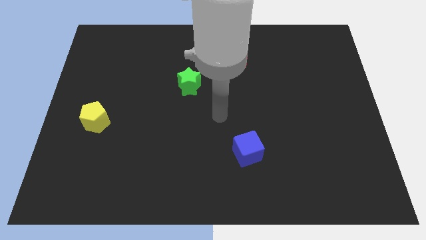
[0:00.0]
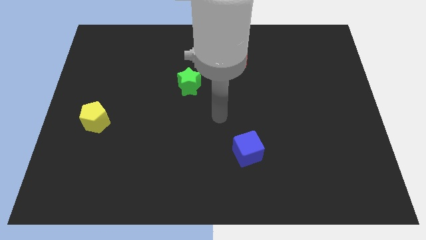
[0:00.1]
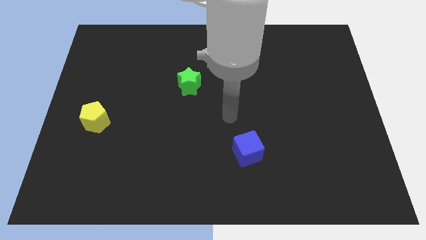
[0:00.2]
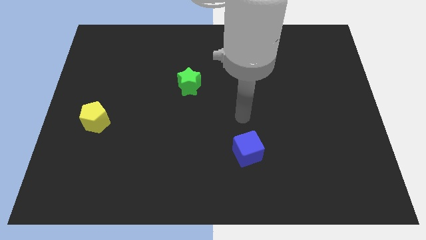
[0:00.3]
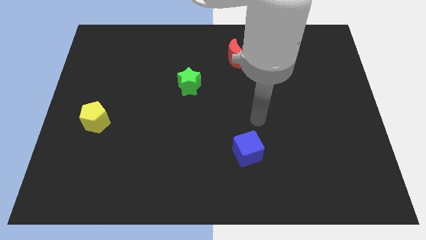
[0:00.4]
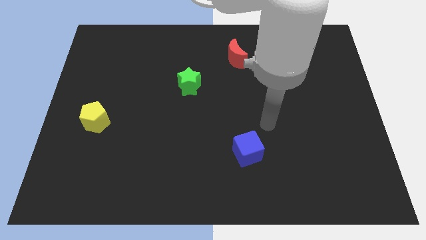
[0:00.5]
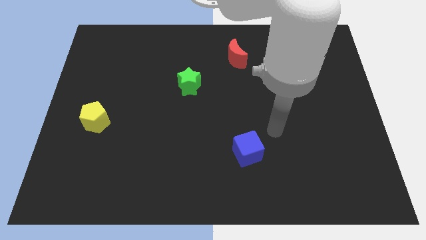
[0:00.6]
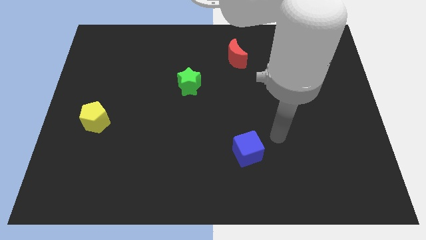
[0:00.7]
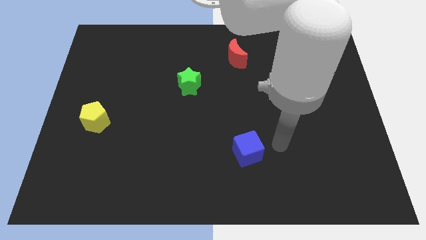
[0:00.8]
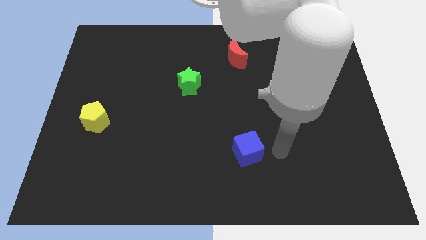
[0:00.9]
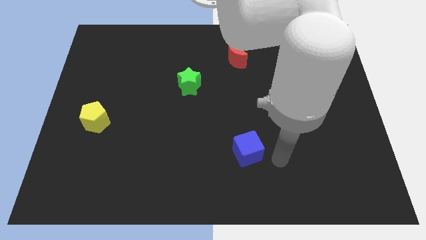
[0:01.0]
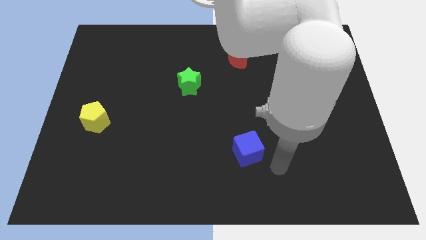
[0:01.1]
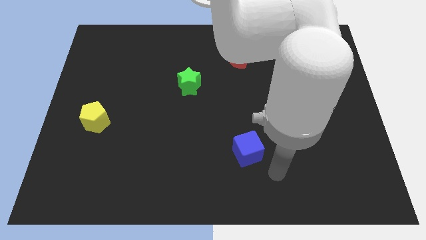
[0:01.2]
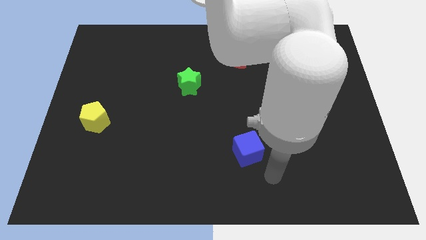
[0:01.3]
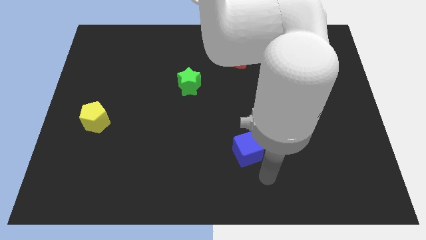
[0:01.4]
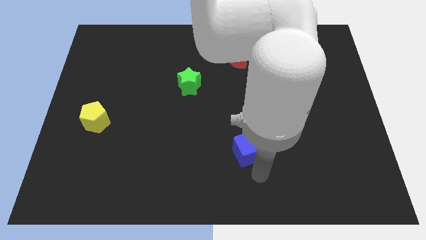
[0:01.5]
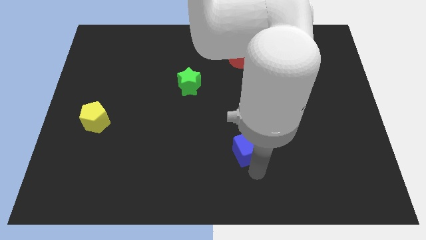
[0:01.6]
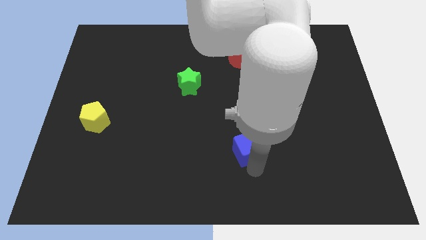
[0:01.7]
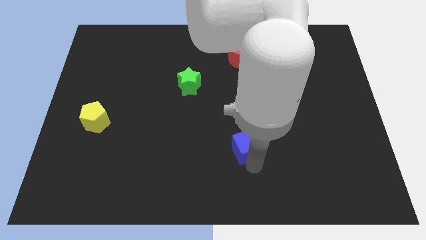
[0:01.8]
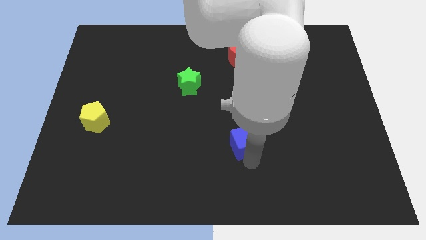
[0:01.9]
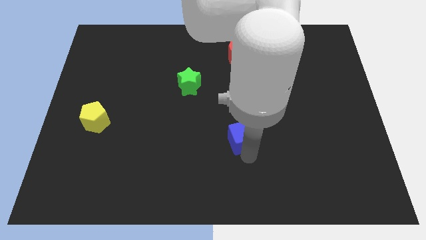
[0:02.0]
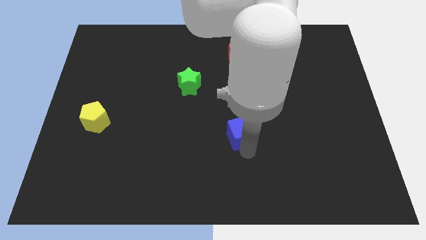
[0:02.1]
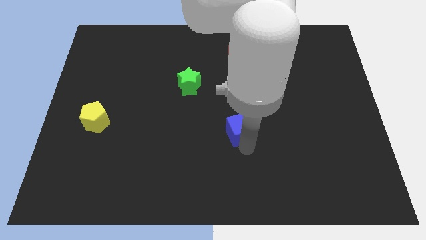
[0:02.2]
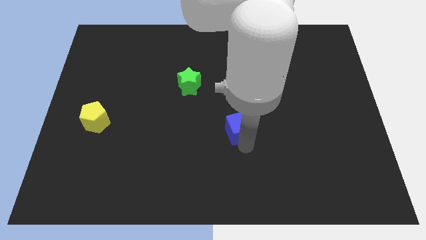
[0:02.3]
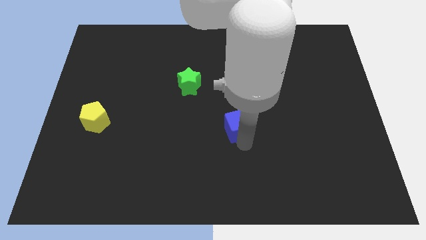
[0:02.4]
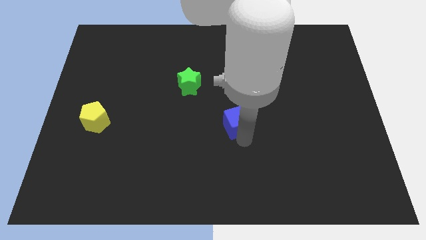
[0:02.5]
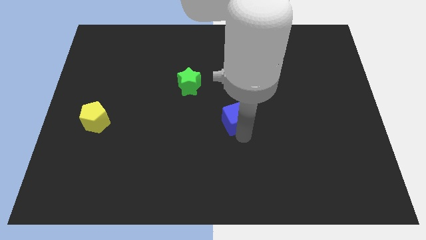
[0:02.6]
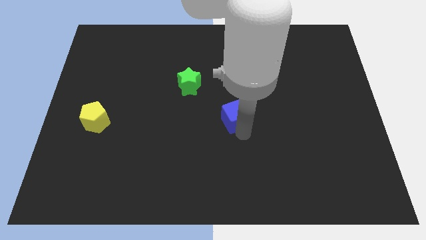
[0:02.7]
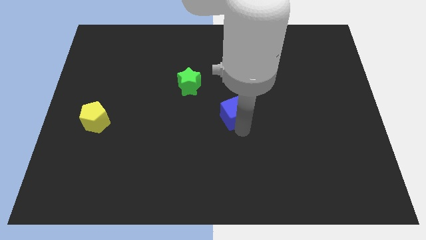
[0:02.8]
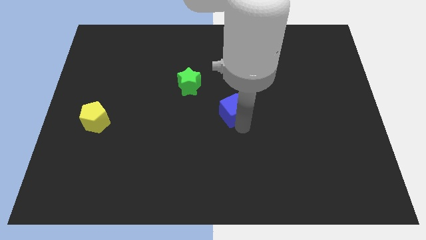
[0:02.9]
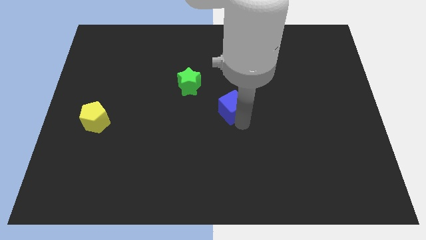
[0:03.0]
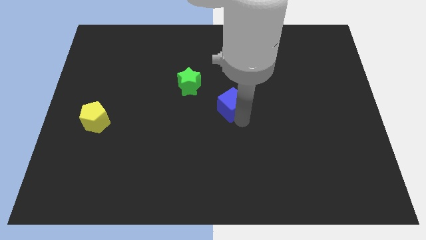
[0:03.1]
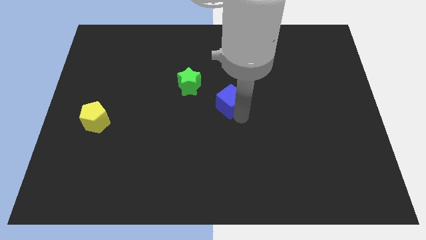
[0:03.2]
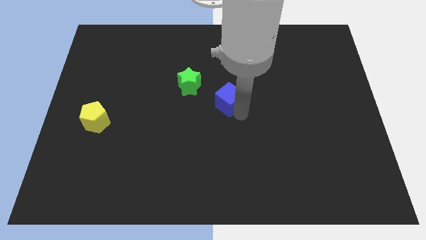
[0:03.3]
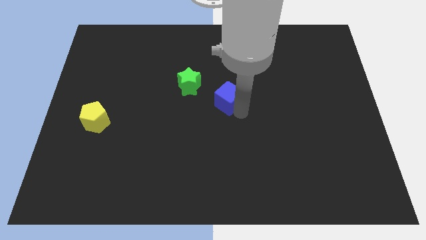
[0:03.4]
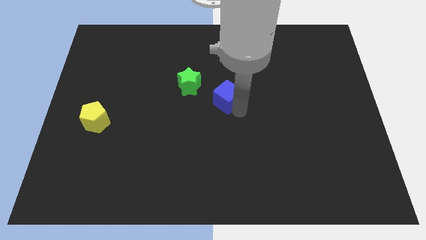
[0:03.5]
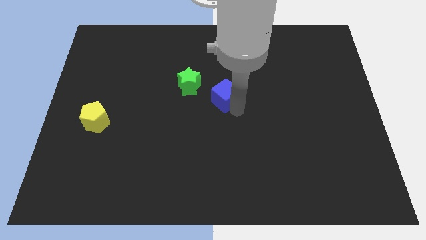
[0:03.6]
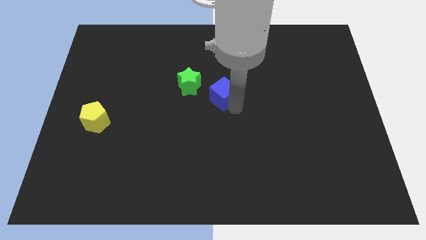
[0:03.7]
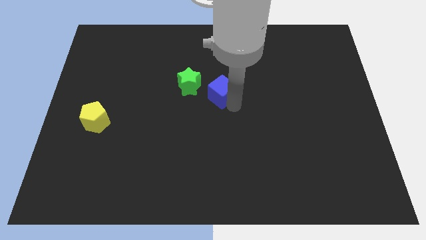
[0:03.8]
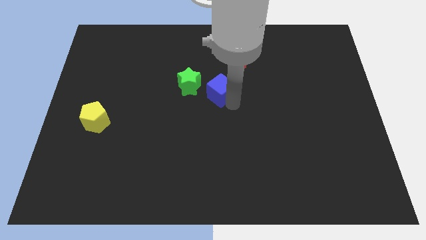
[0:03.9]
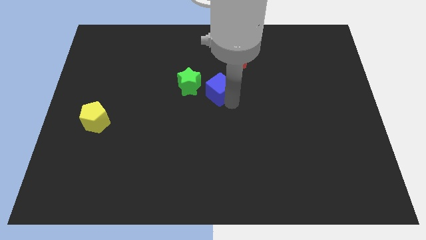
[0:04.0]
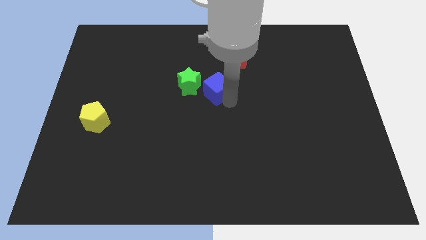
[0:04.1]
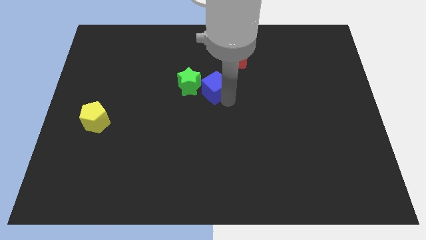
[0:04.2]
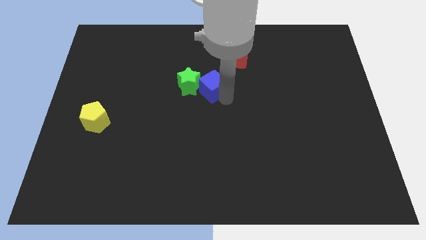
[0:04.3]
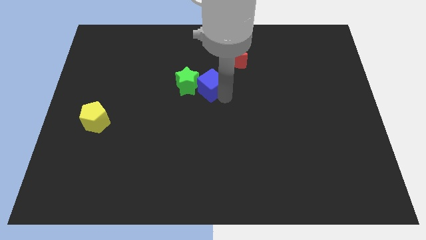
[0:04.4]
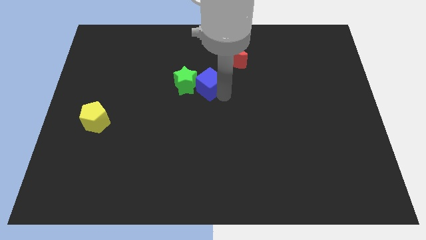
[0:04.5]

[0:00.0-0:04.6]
put the blue block close to the green block

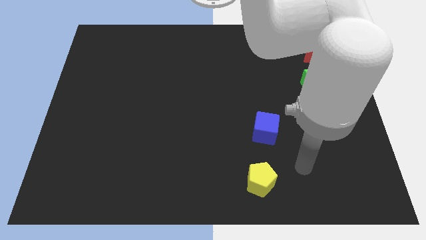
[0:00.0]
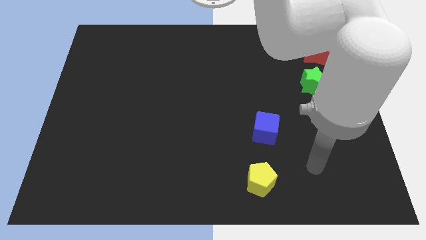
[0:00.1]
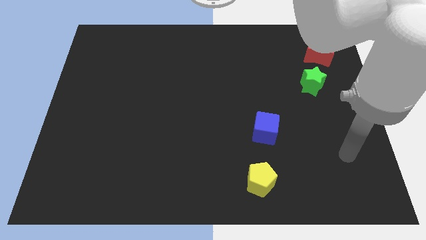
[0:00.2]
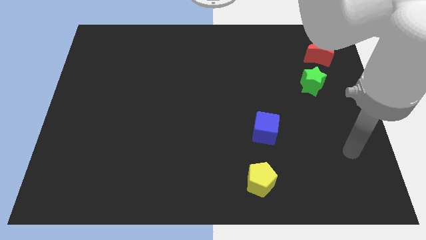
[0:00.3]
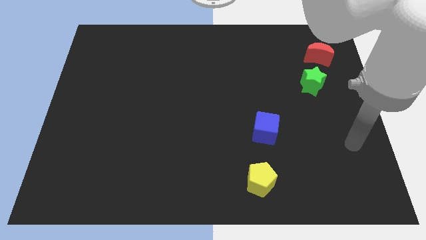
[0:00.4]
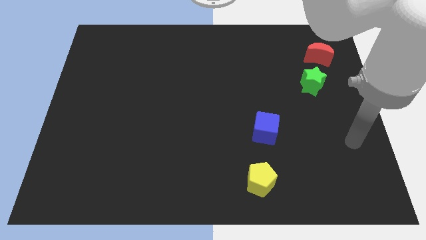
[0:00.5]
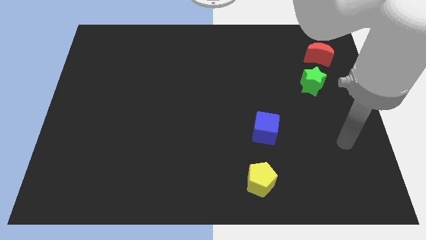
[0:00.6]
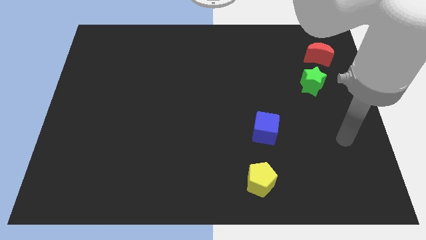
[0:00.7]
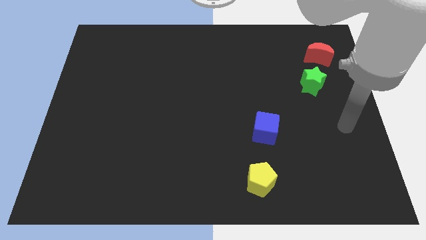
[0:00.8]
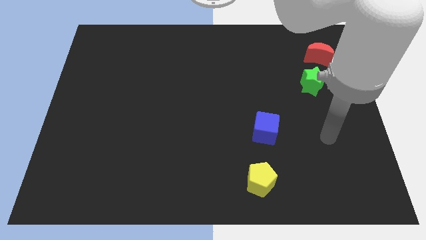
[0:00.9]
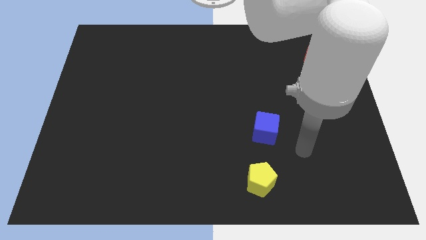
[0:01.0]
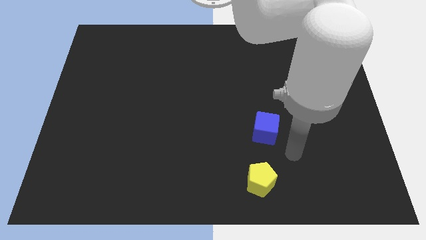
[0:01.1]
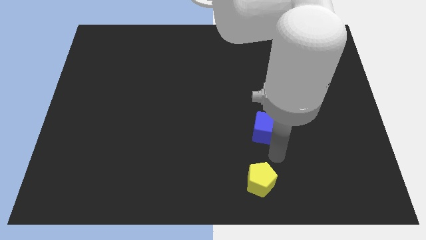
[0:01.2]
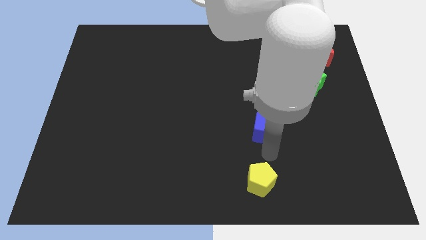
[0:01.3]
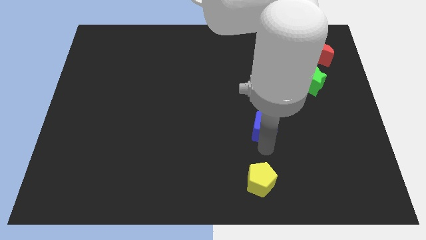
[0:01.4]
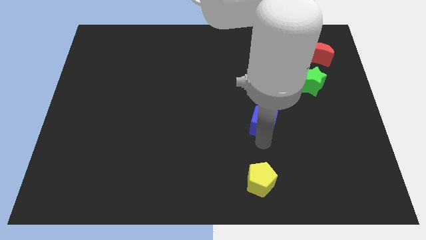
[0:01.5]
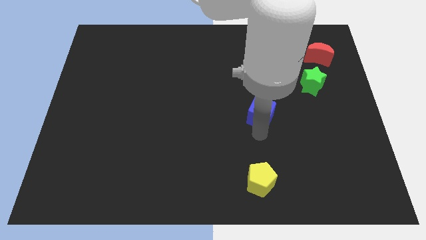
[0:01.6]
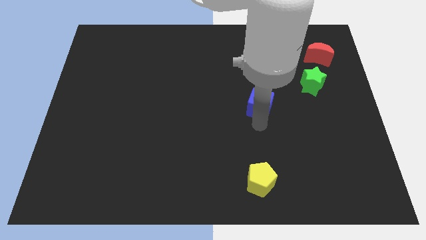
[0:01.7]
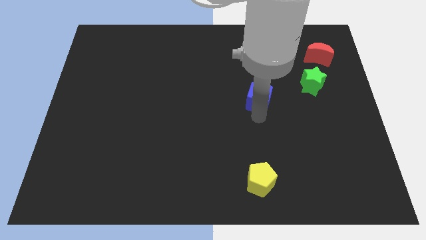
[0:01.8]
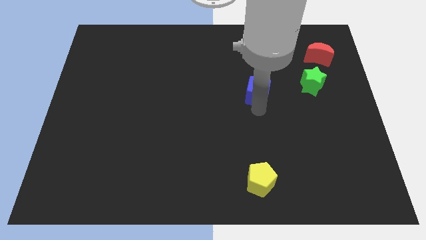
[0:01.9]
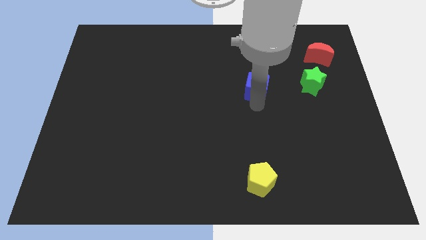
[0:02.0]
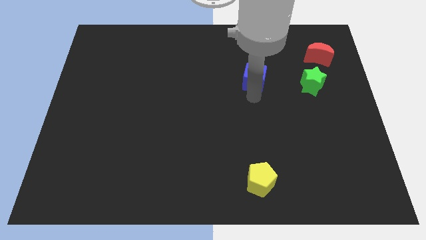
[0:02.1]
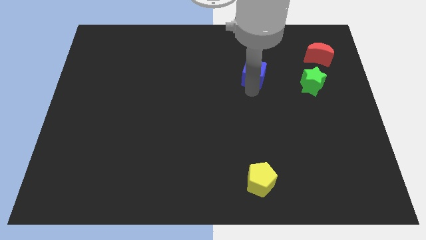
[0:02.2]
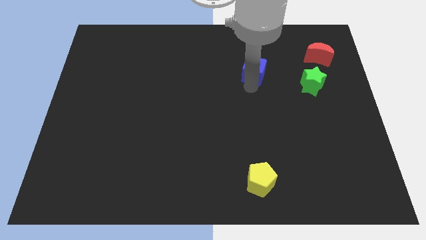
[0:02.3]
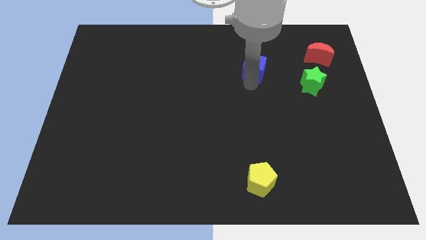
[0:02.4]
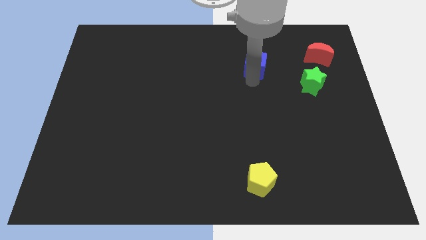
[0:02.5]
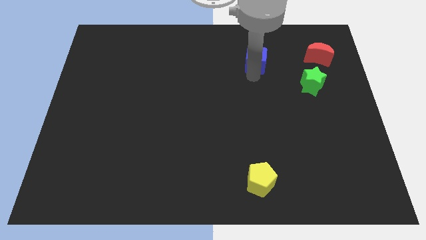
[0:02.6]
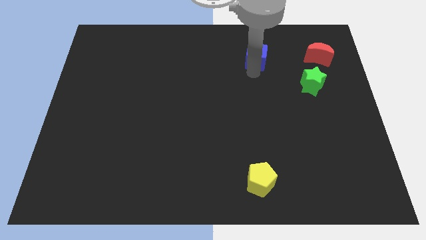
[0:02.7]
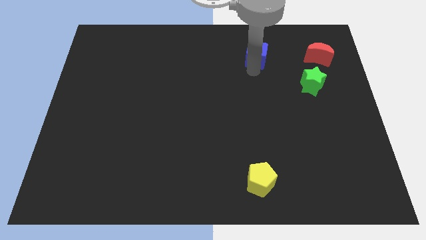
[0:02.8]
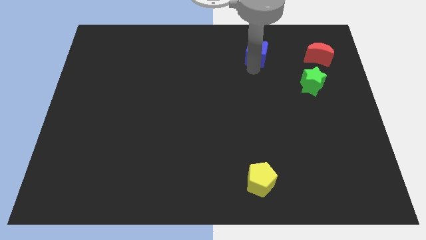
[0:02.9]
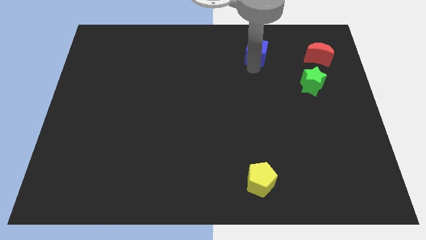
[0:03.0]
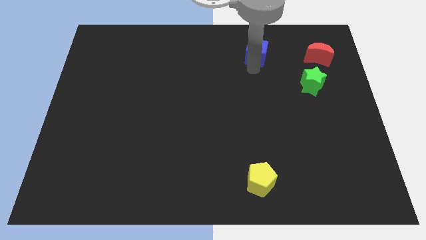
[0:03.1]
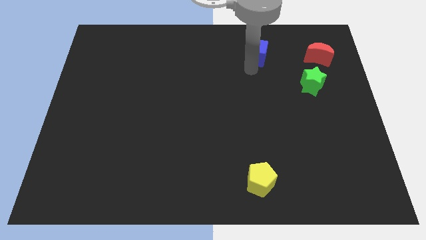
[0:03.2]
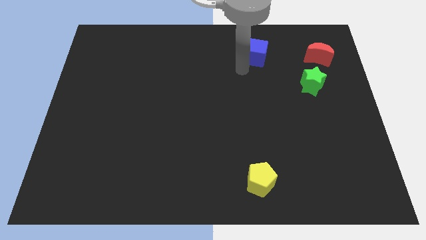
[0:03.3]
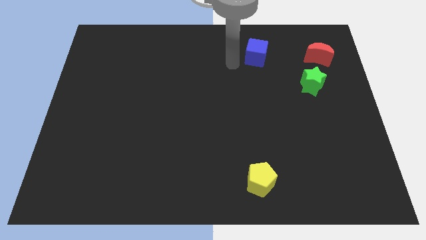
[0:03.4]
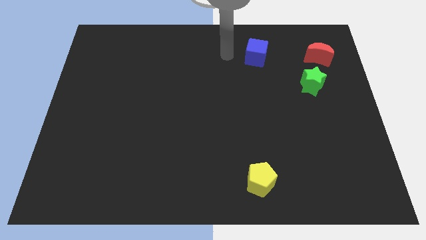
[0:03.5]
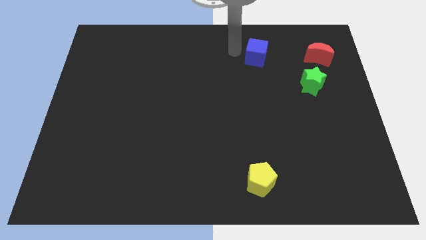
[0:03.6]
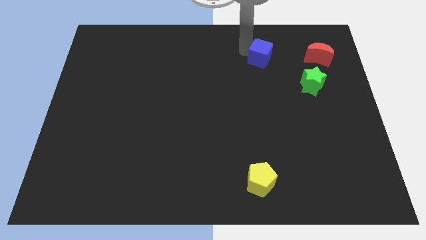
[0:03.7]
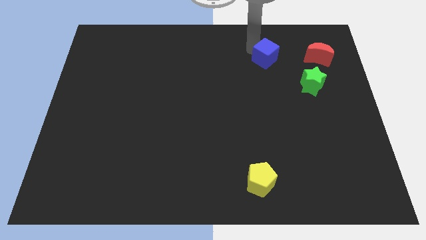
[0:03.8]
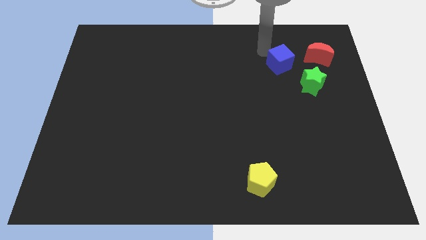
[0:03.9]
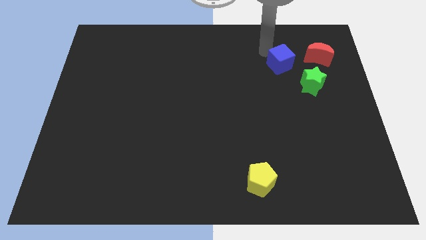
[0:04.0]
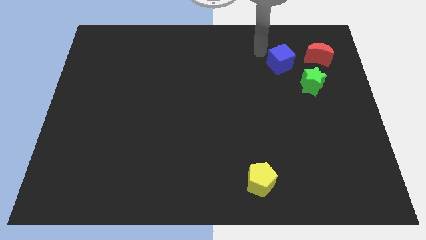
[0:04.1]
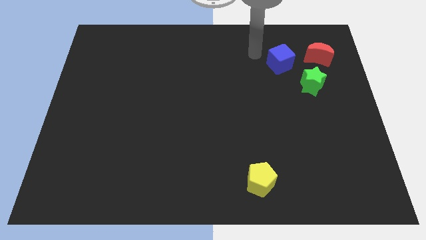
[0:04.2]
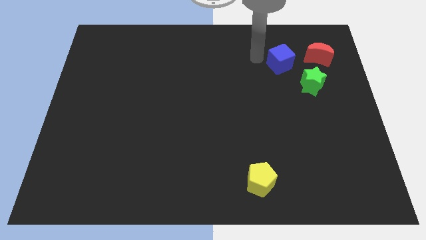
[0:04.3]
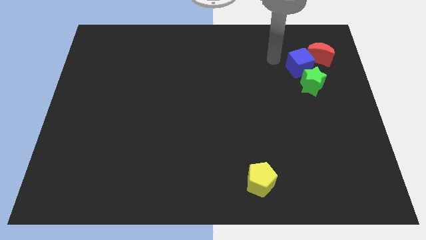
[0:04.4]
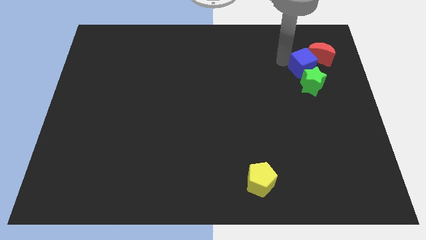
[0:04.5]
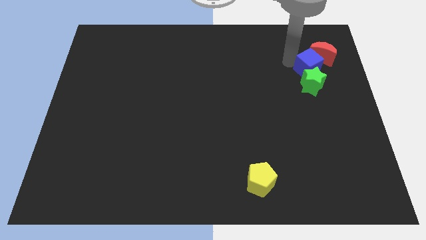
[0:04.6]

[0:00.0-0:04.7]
slide the blue block towards the red block
